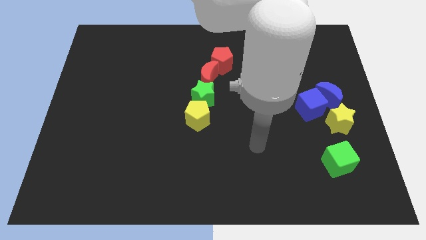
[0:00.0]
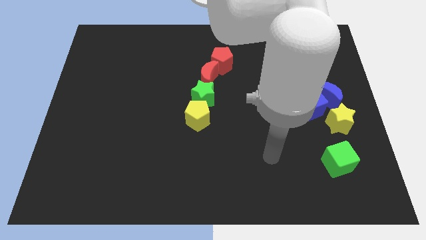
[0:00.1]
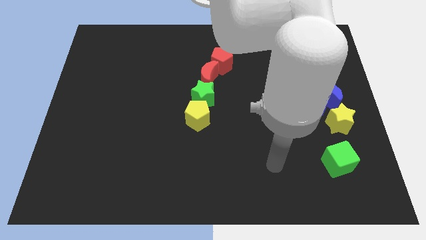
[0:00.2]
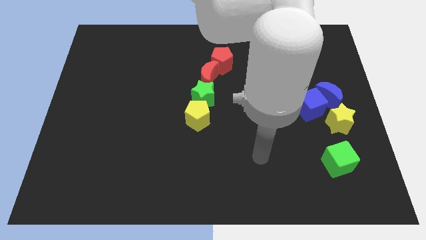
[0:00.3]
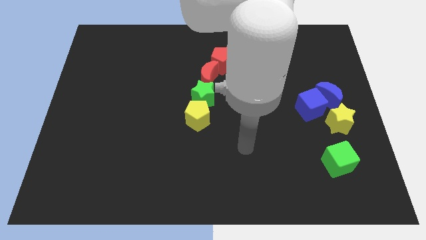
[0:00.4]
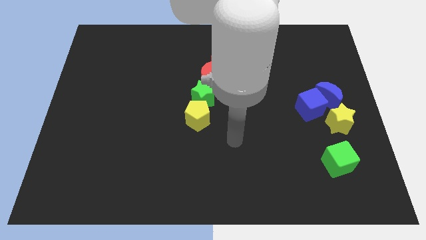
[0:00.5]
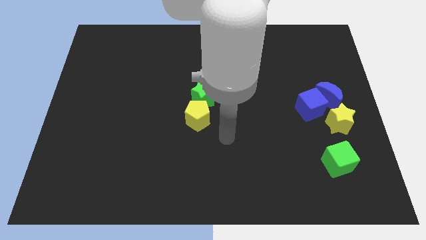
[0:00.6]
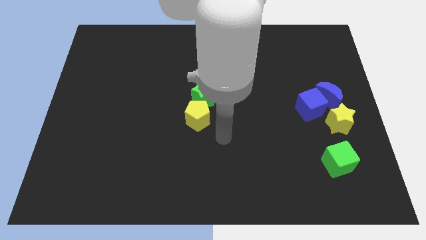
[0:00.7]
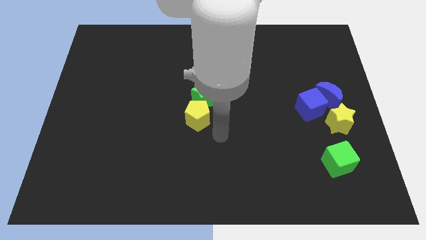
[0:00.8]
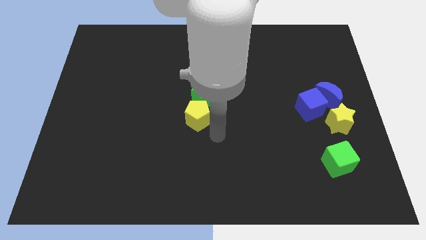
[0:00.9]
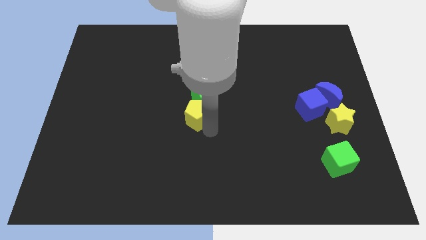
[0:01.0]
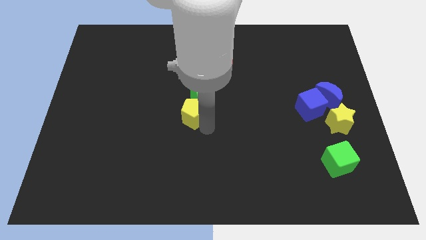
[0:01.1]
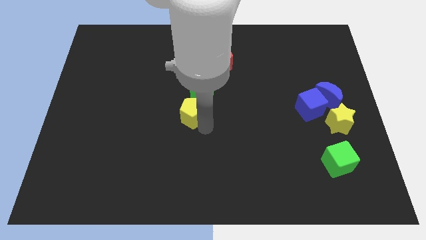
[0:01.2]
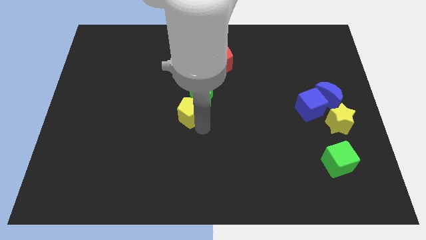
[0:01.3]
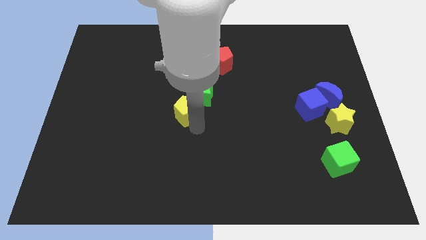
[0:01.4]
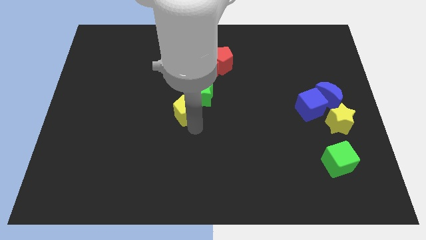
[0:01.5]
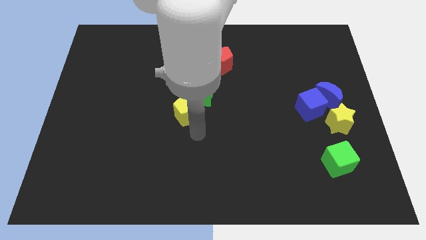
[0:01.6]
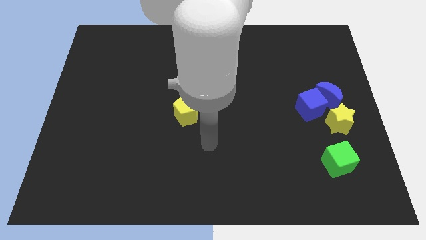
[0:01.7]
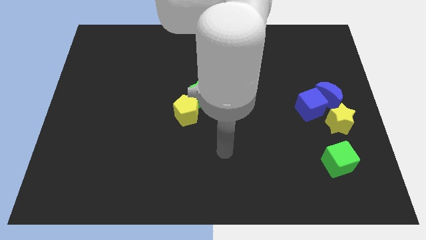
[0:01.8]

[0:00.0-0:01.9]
slightly push the yellow pentagon to the left side of the green star

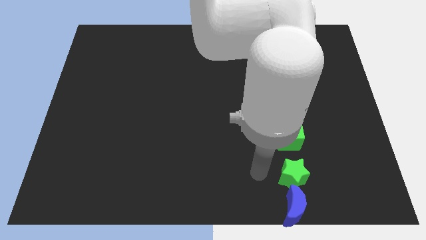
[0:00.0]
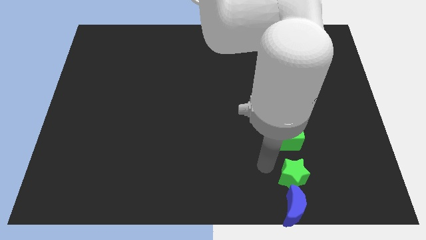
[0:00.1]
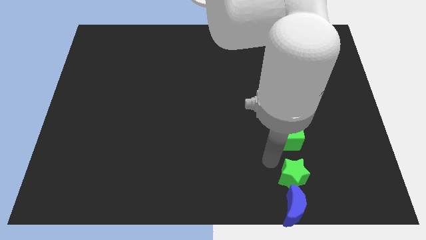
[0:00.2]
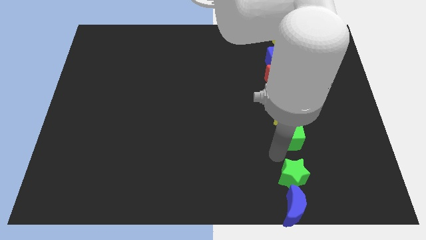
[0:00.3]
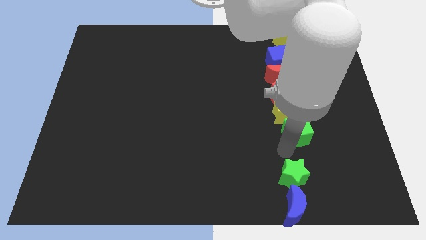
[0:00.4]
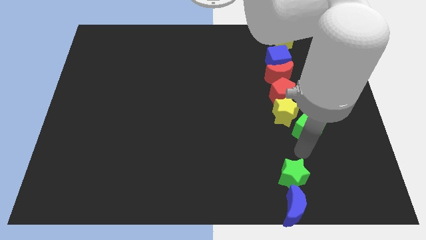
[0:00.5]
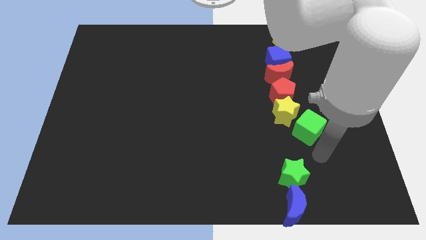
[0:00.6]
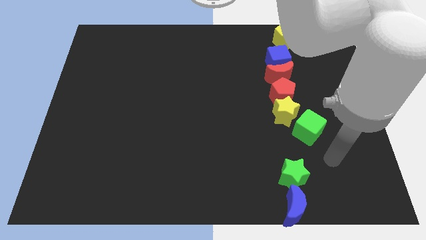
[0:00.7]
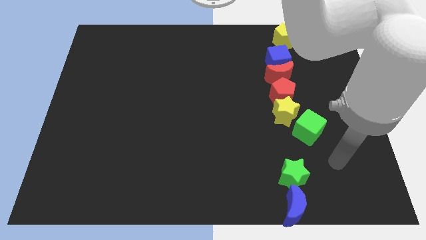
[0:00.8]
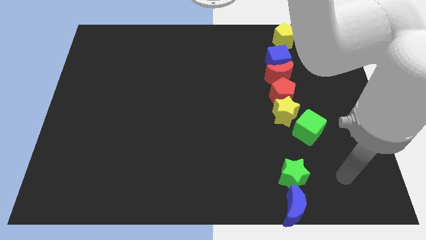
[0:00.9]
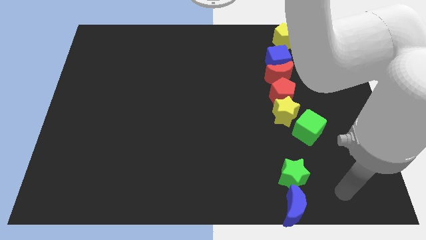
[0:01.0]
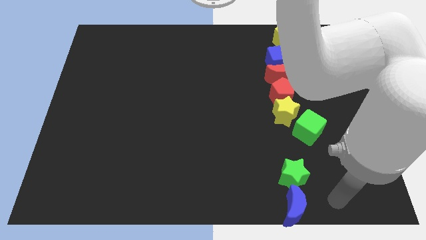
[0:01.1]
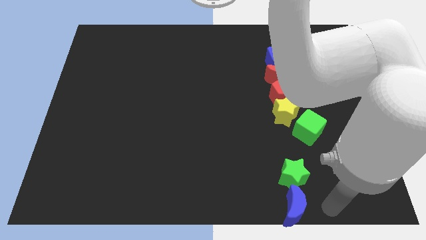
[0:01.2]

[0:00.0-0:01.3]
place the green cube diagonal to the yellow star

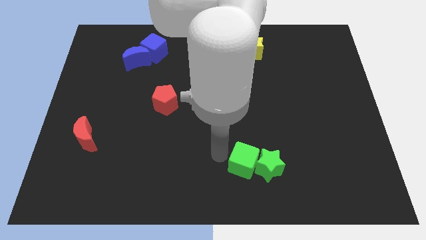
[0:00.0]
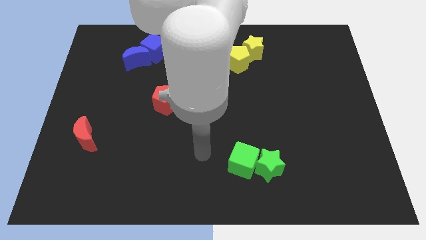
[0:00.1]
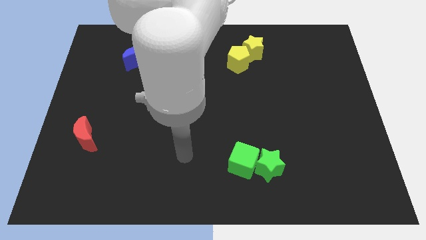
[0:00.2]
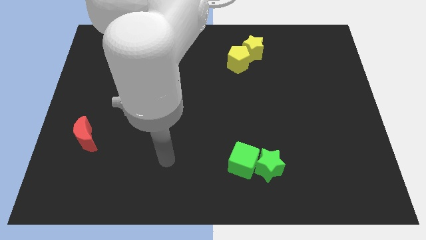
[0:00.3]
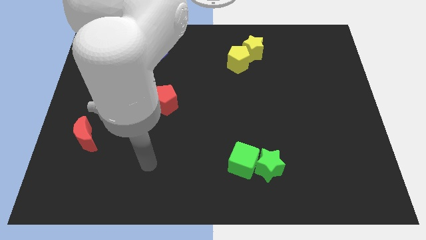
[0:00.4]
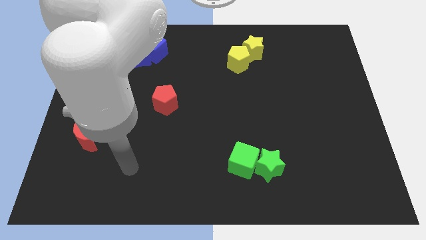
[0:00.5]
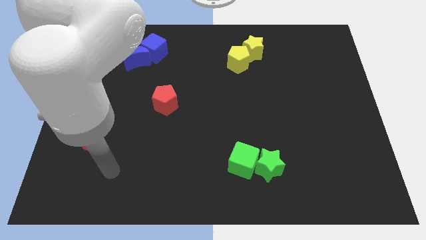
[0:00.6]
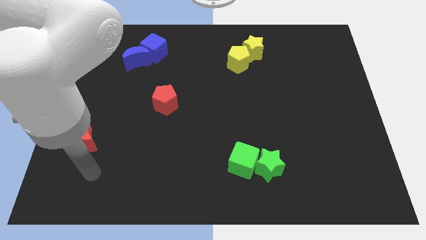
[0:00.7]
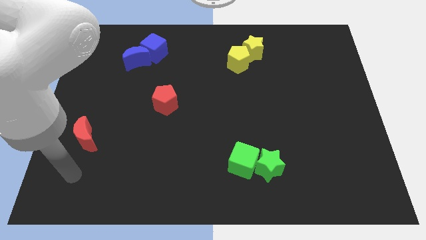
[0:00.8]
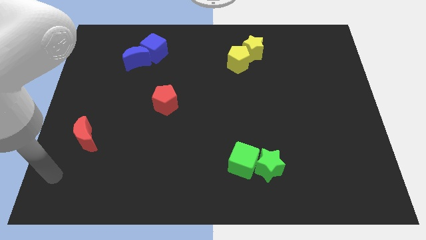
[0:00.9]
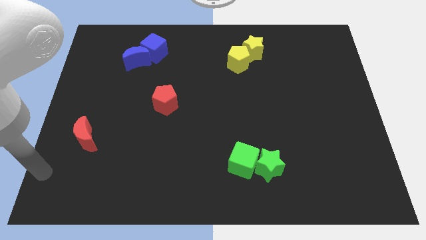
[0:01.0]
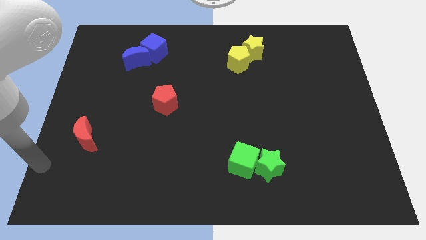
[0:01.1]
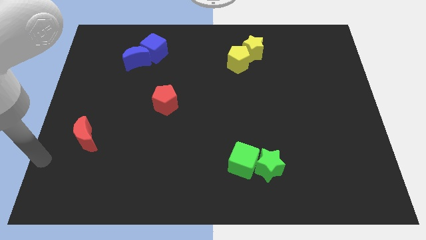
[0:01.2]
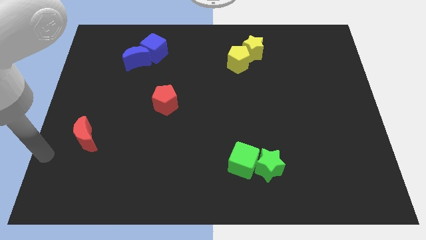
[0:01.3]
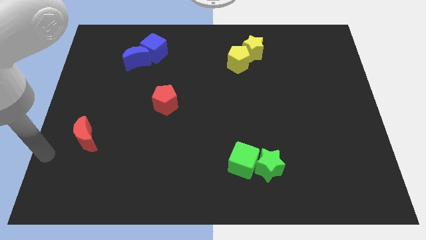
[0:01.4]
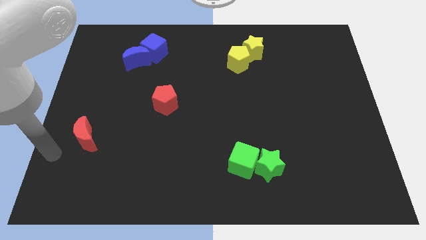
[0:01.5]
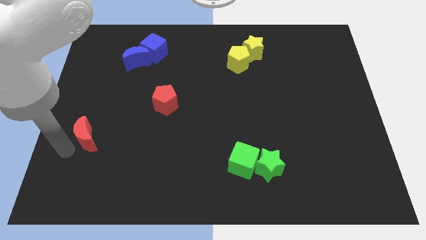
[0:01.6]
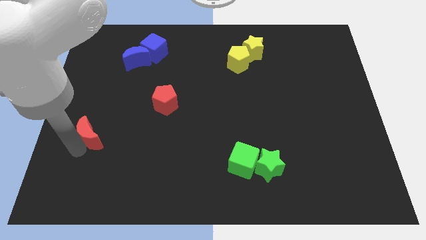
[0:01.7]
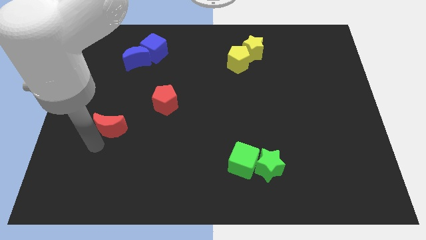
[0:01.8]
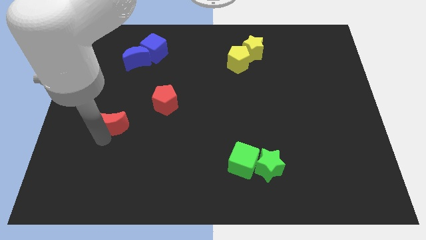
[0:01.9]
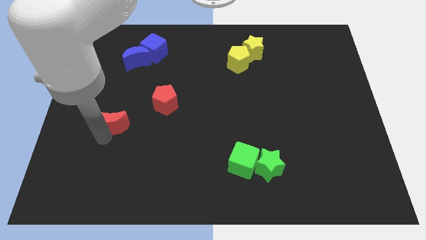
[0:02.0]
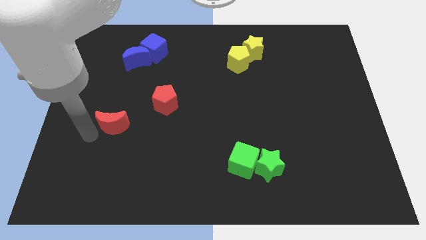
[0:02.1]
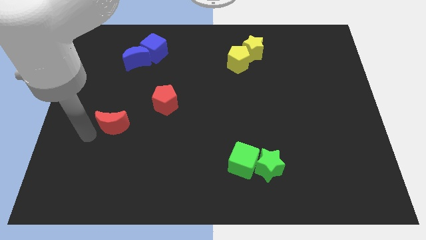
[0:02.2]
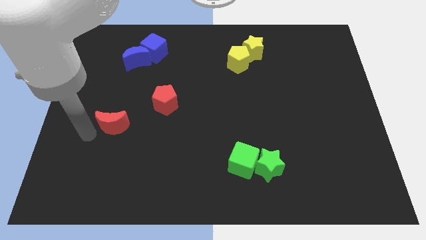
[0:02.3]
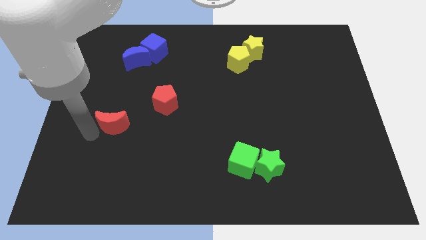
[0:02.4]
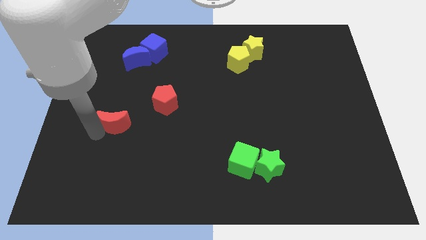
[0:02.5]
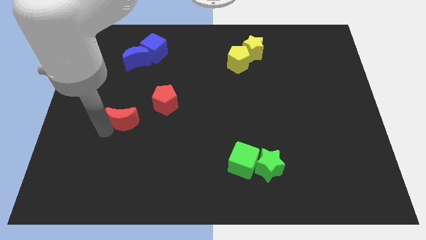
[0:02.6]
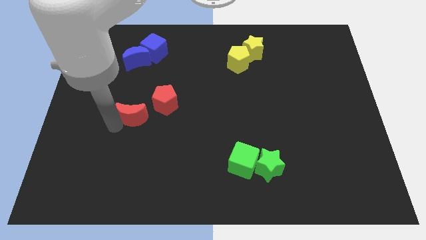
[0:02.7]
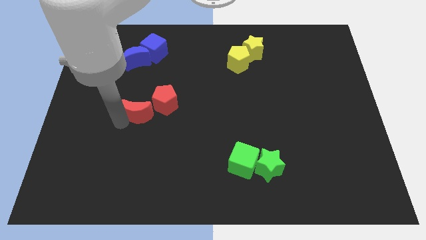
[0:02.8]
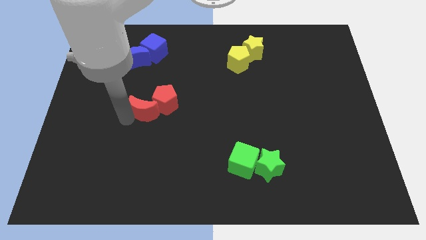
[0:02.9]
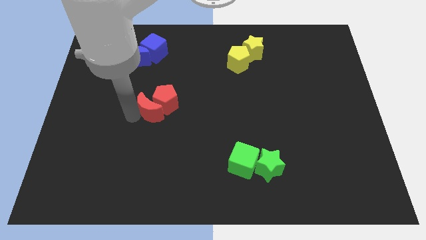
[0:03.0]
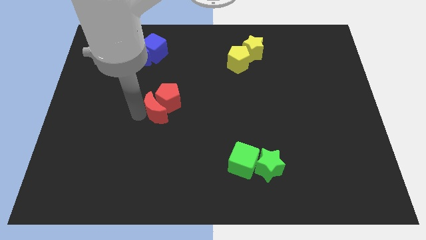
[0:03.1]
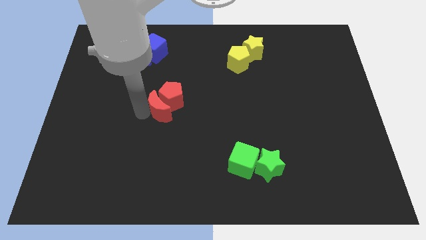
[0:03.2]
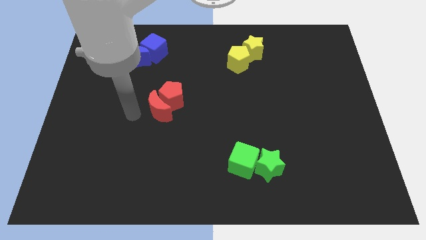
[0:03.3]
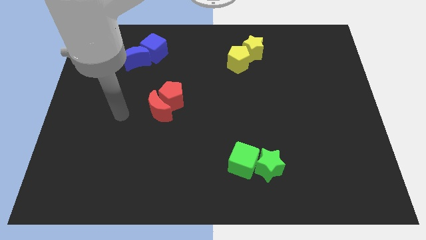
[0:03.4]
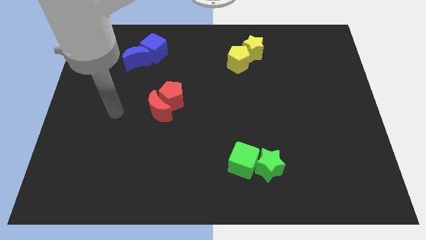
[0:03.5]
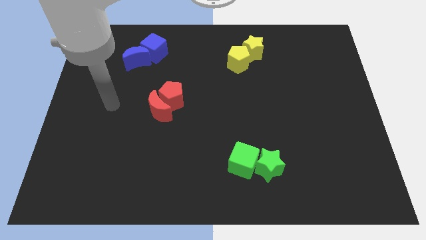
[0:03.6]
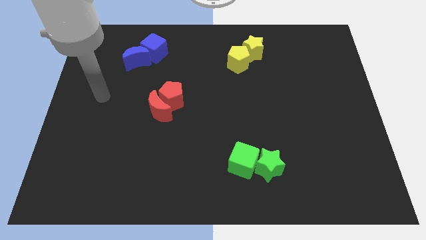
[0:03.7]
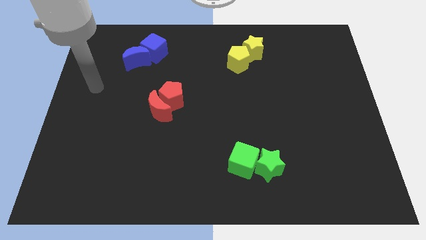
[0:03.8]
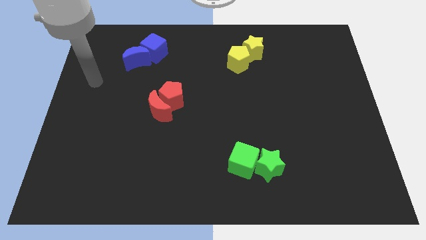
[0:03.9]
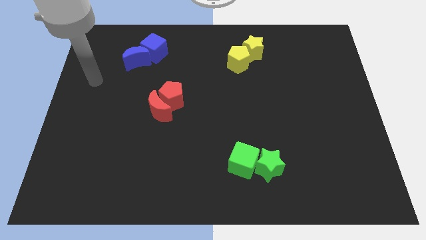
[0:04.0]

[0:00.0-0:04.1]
slide the red crescent into the left side of the red pentagon

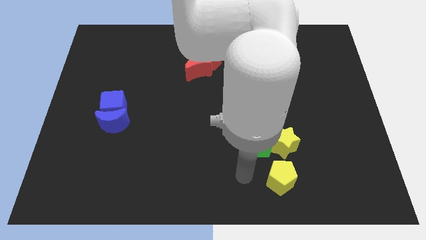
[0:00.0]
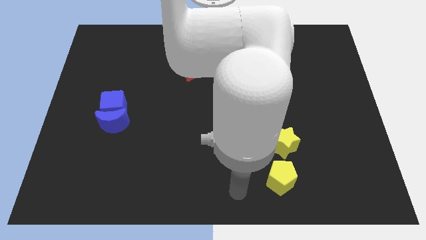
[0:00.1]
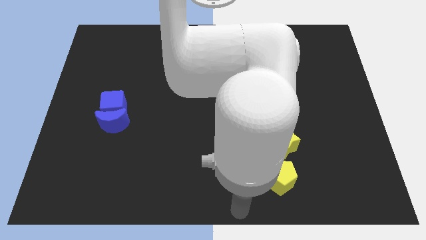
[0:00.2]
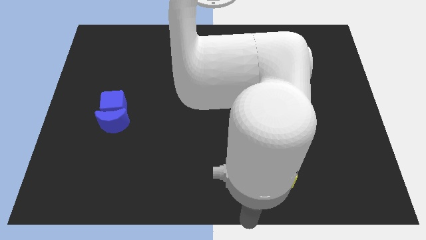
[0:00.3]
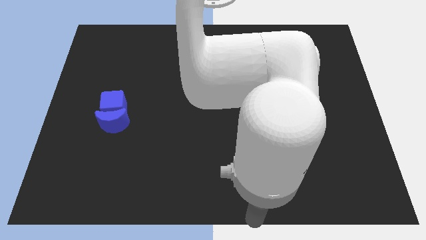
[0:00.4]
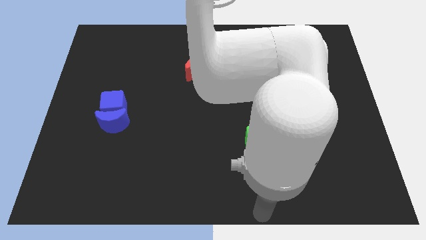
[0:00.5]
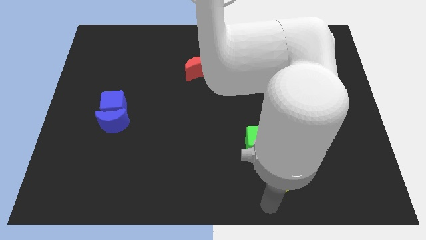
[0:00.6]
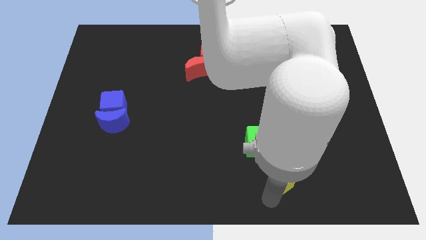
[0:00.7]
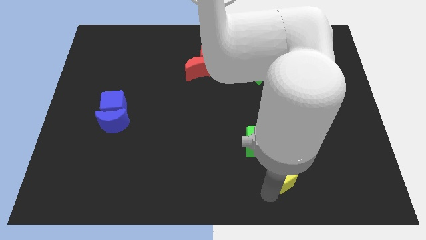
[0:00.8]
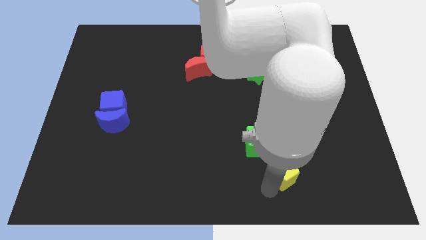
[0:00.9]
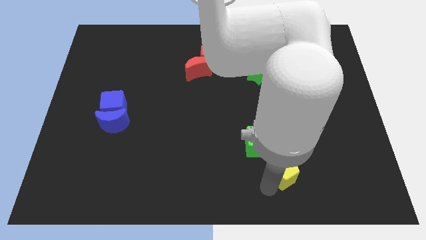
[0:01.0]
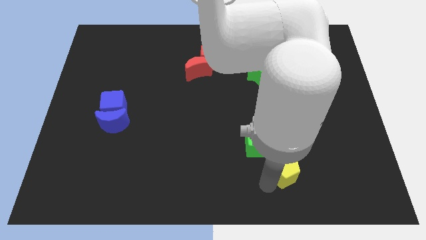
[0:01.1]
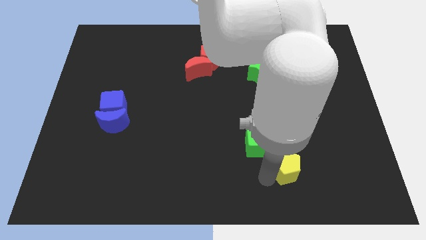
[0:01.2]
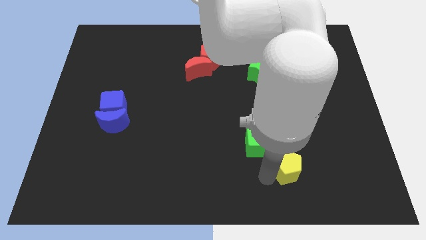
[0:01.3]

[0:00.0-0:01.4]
push the yellow pentagon close to the yellow star

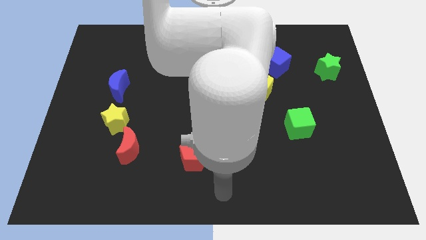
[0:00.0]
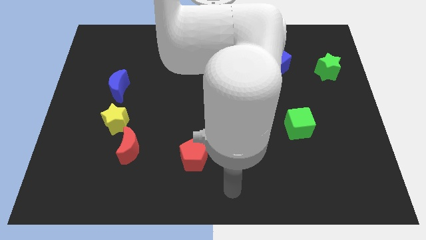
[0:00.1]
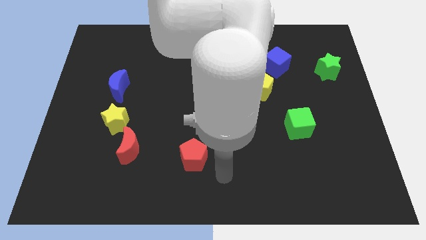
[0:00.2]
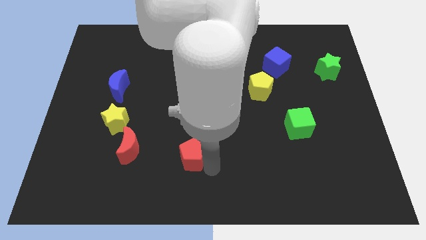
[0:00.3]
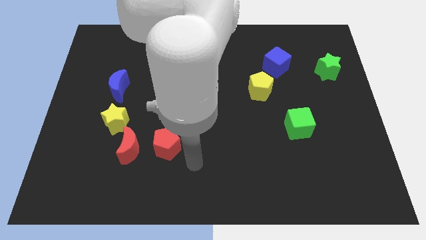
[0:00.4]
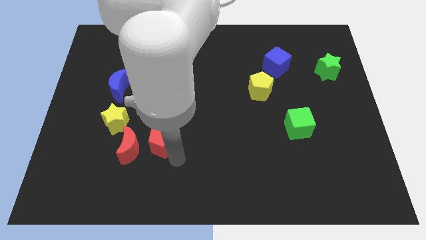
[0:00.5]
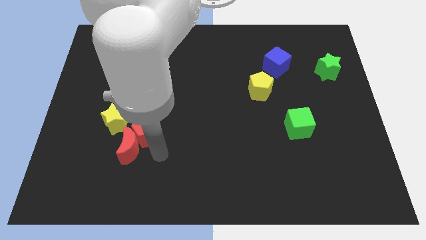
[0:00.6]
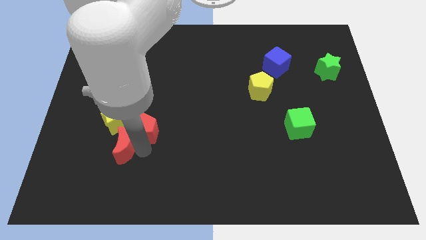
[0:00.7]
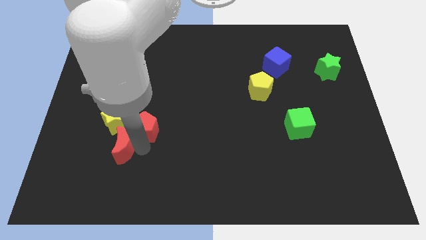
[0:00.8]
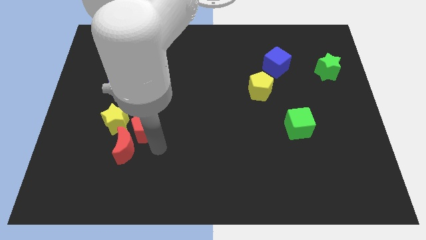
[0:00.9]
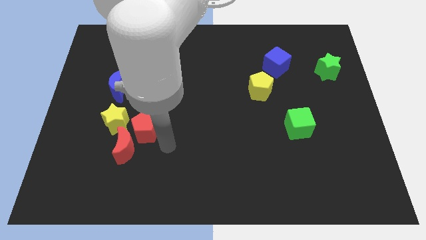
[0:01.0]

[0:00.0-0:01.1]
push the red pentagon into red moon
